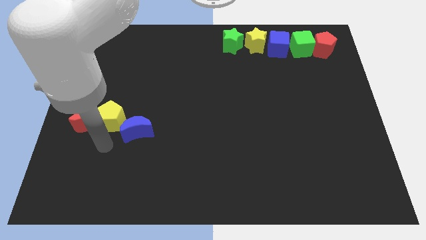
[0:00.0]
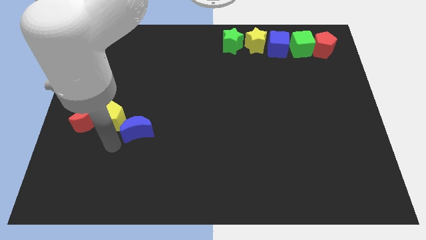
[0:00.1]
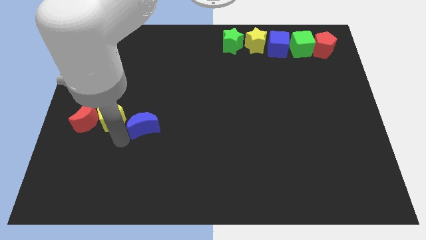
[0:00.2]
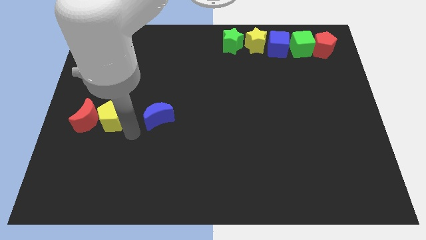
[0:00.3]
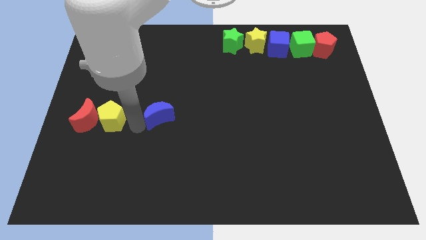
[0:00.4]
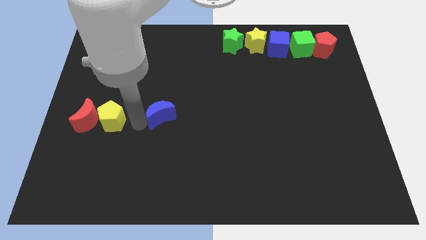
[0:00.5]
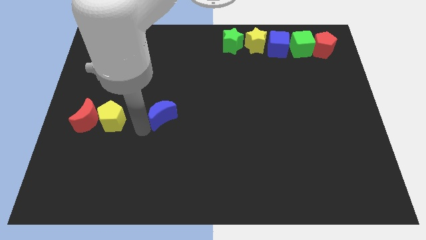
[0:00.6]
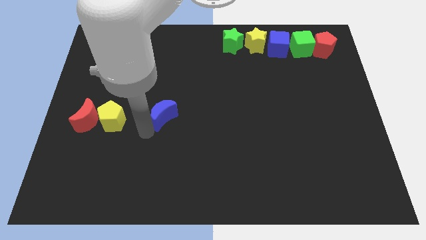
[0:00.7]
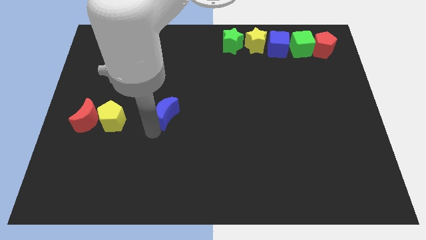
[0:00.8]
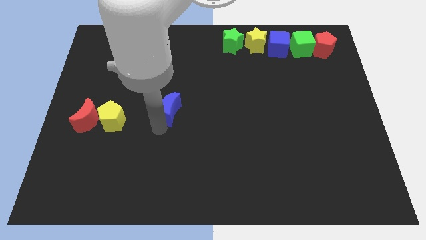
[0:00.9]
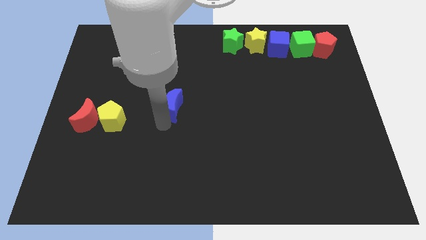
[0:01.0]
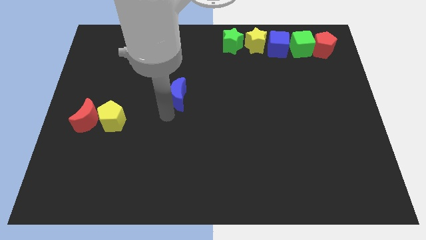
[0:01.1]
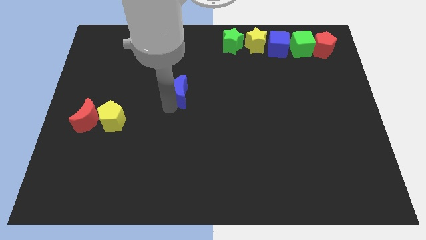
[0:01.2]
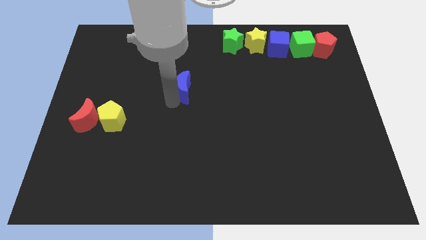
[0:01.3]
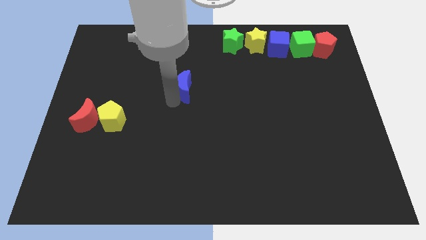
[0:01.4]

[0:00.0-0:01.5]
push the blue crescent diagonally on the top right side of the yellow pentagon

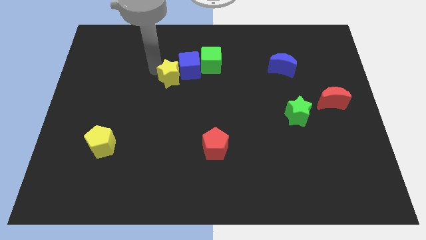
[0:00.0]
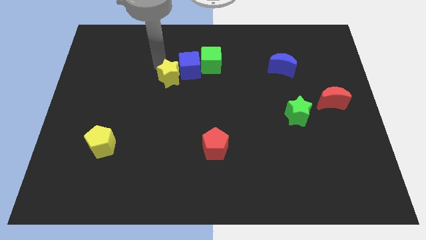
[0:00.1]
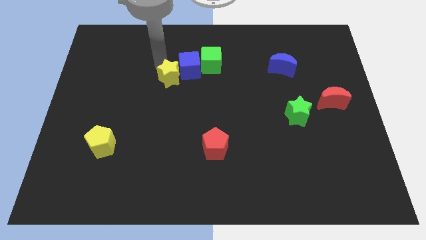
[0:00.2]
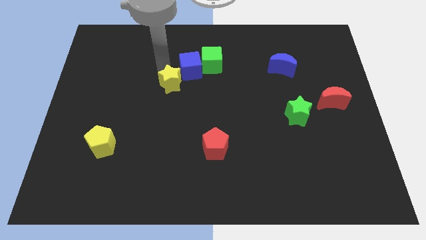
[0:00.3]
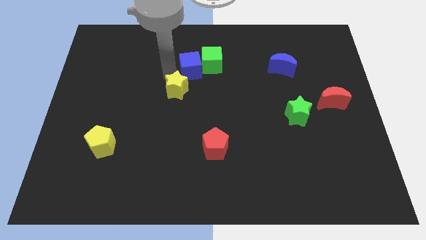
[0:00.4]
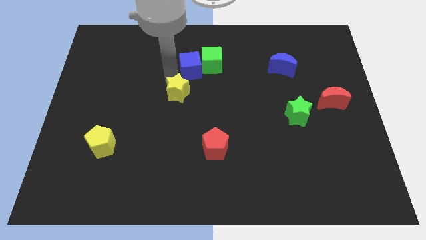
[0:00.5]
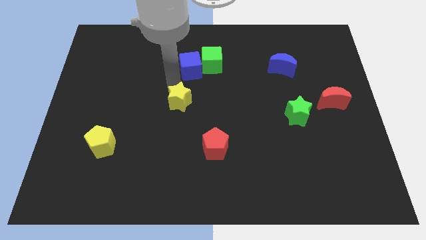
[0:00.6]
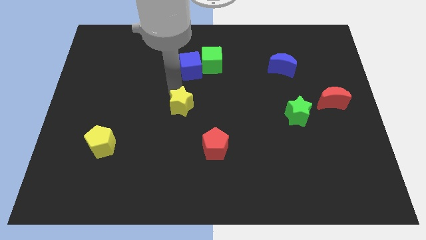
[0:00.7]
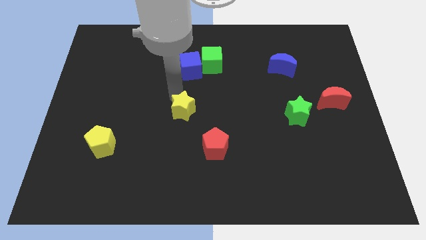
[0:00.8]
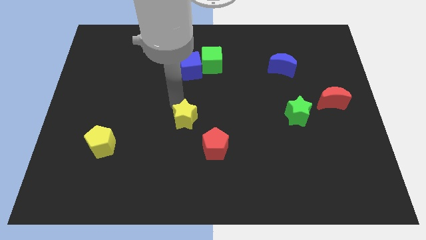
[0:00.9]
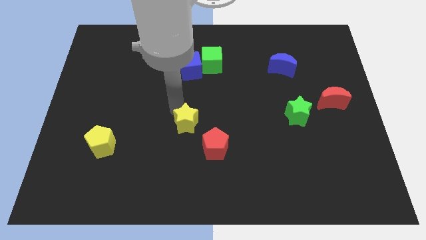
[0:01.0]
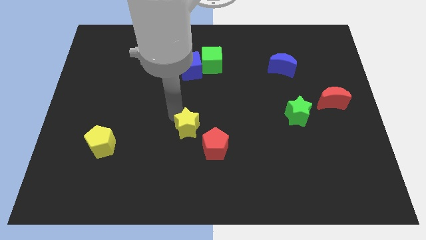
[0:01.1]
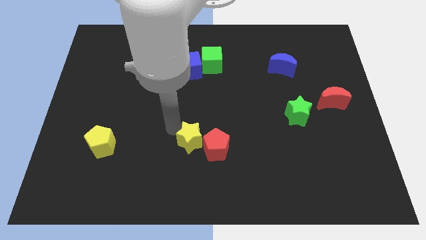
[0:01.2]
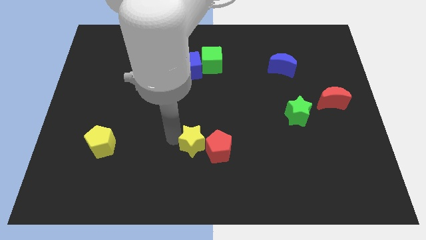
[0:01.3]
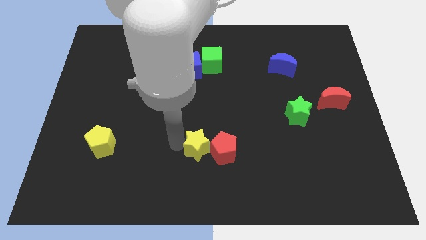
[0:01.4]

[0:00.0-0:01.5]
move the yellow star to the left of the red pentagon

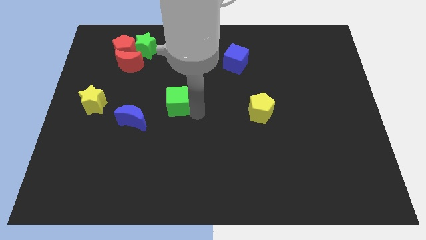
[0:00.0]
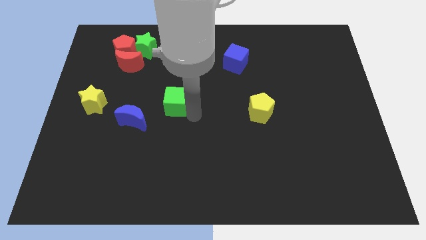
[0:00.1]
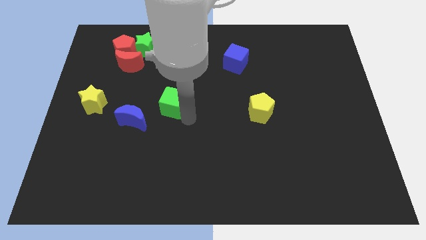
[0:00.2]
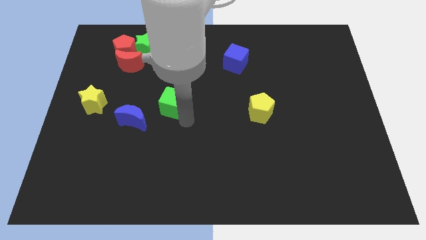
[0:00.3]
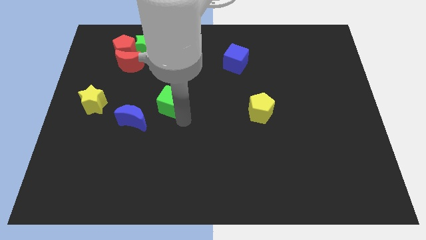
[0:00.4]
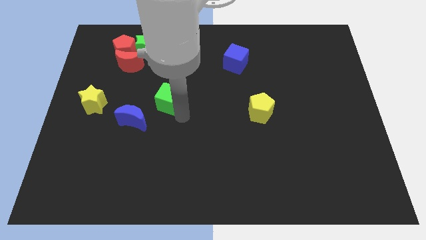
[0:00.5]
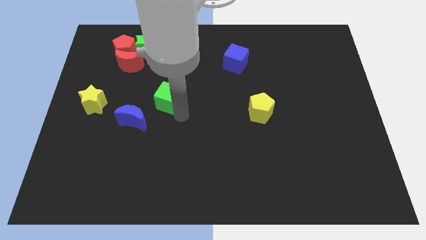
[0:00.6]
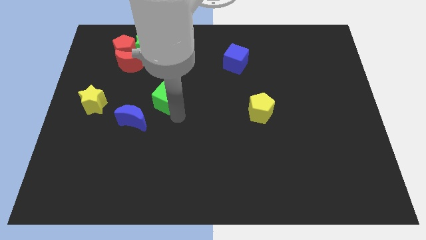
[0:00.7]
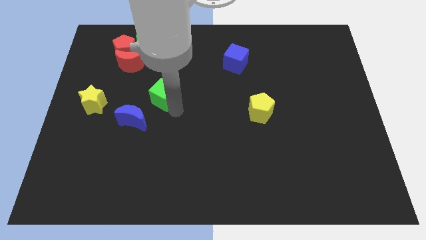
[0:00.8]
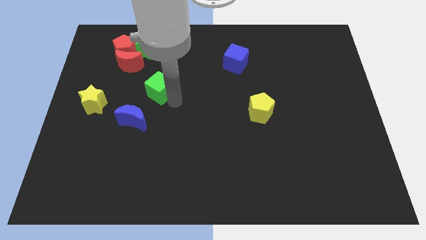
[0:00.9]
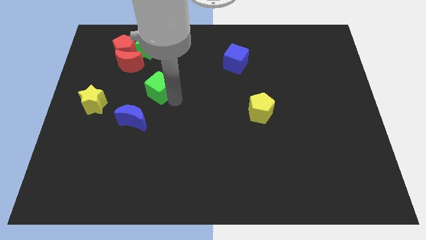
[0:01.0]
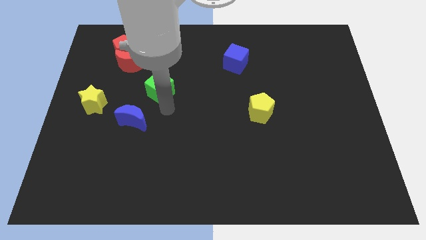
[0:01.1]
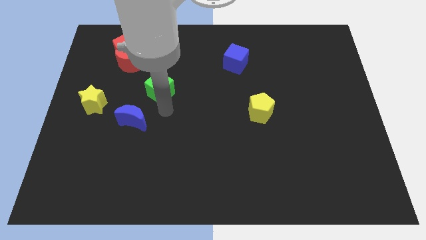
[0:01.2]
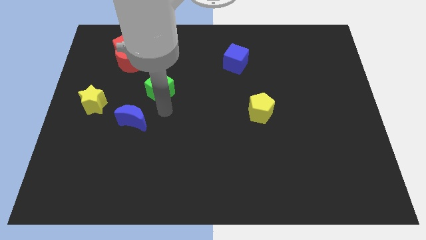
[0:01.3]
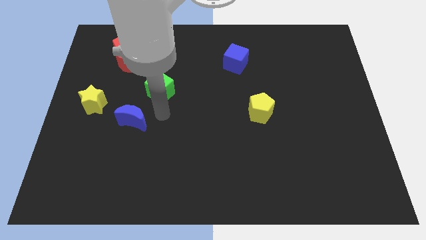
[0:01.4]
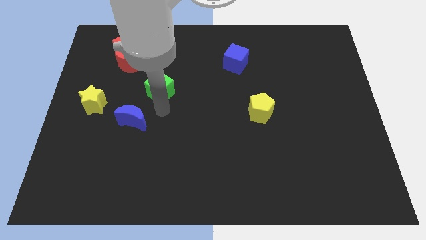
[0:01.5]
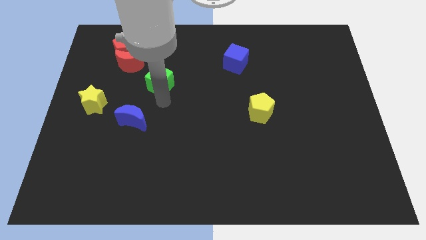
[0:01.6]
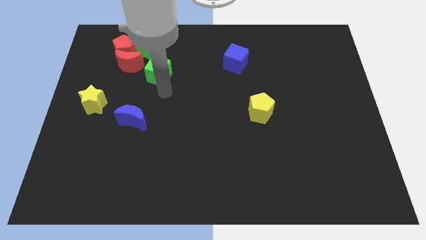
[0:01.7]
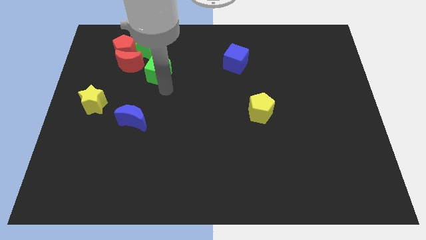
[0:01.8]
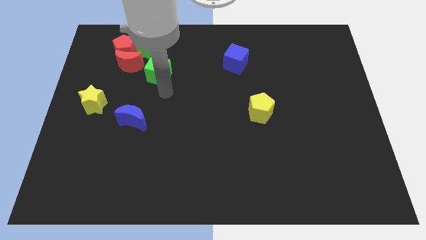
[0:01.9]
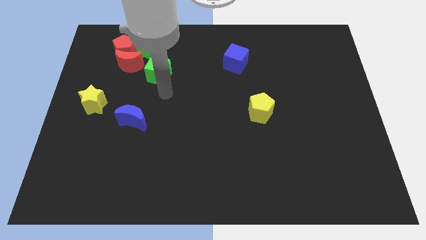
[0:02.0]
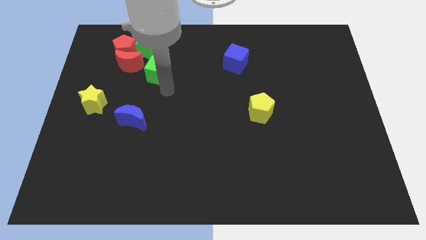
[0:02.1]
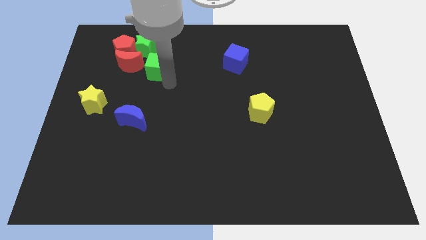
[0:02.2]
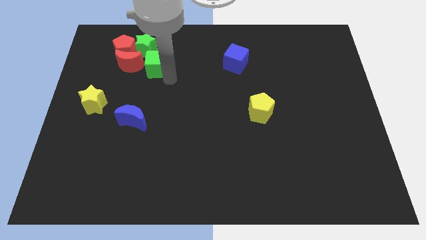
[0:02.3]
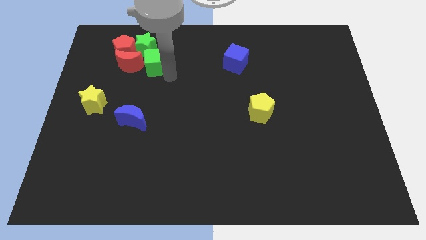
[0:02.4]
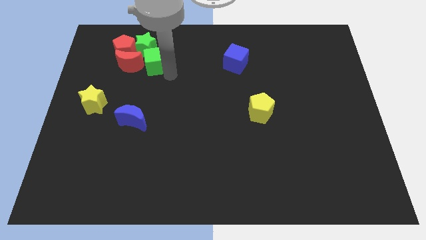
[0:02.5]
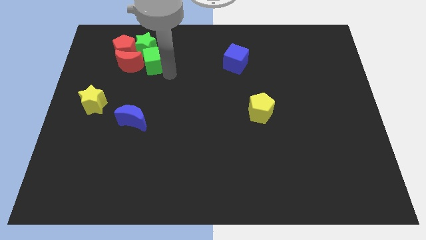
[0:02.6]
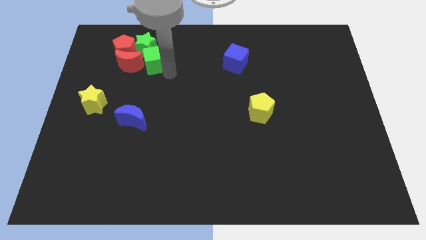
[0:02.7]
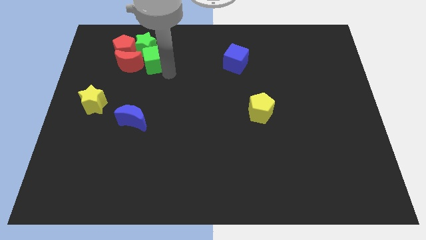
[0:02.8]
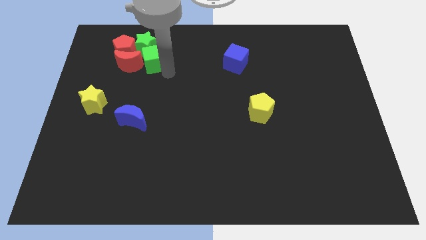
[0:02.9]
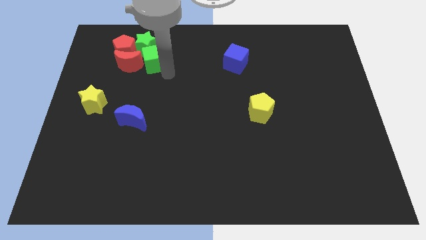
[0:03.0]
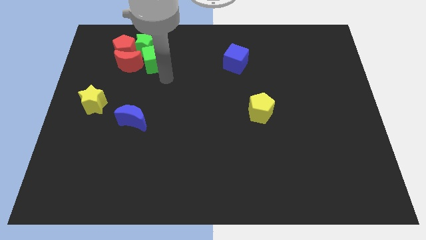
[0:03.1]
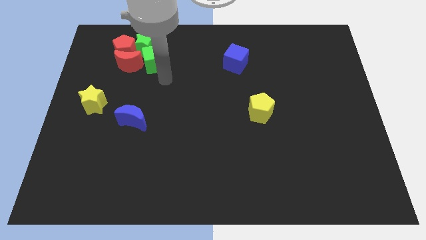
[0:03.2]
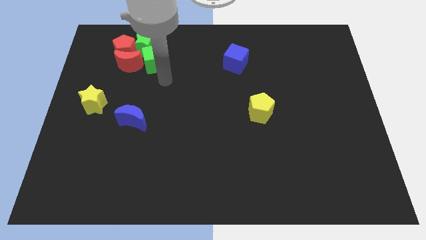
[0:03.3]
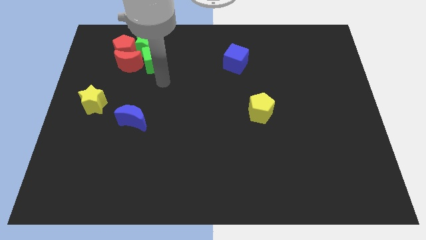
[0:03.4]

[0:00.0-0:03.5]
push the green cube into the green star

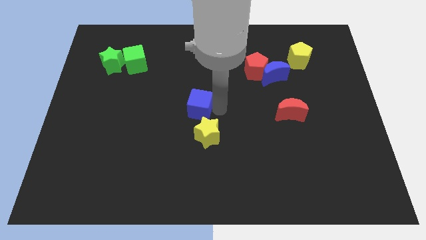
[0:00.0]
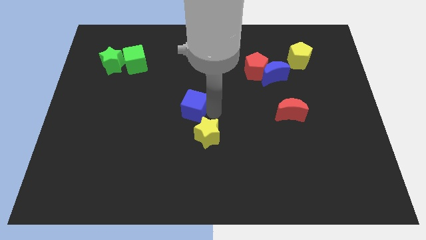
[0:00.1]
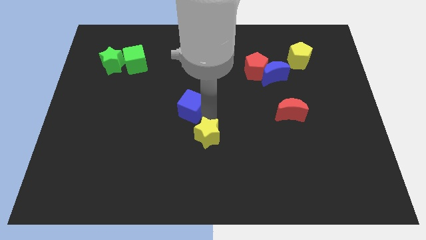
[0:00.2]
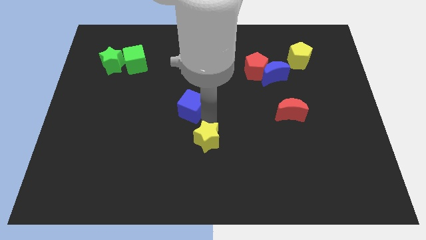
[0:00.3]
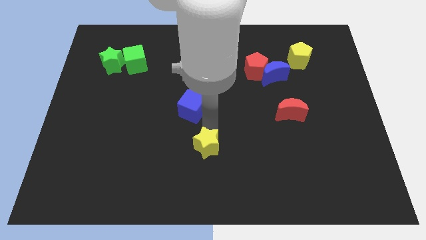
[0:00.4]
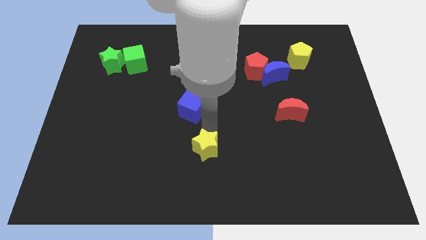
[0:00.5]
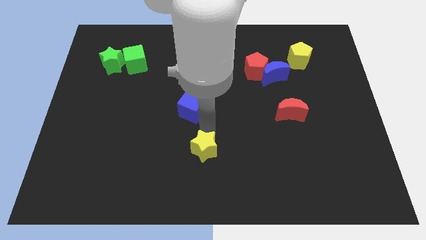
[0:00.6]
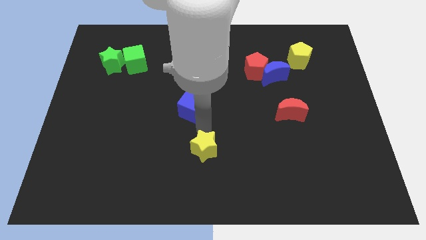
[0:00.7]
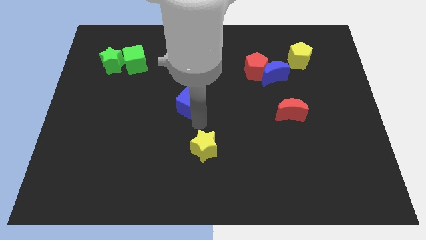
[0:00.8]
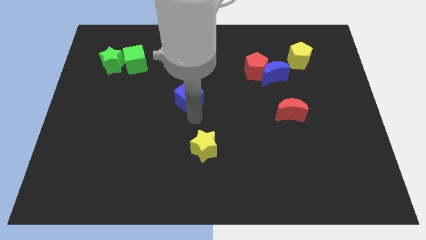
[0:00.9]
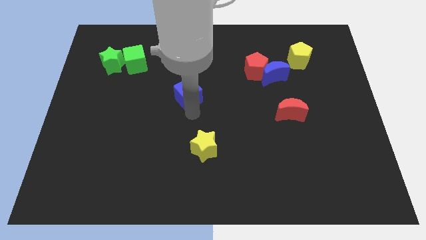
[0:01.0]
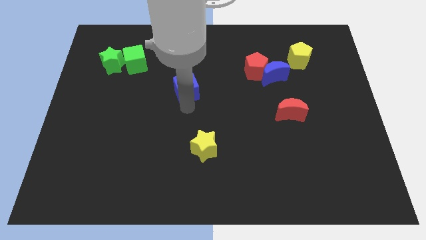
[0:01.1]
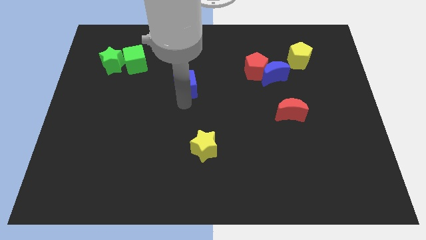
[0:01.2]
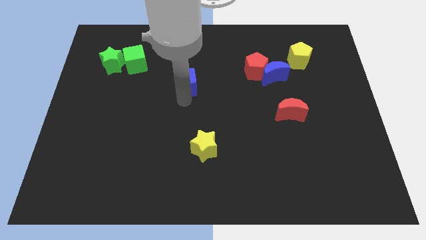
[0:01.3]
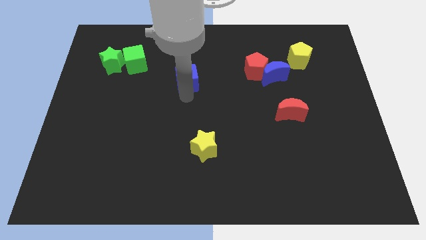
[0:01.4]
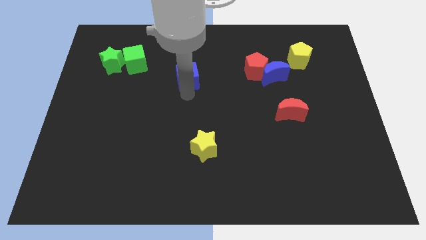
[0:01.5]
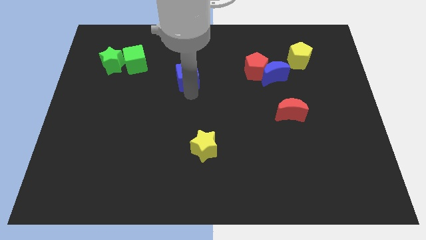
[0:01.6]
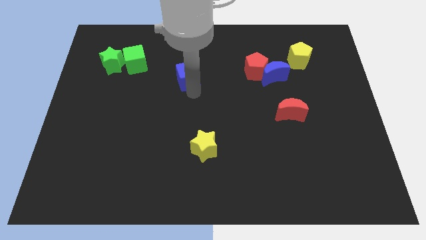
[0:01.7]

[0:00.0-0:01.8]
separate the yellow star and blue cube

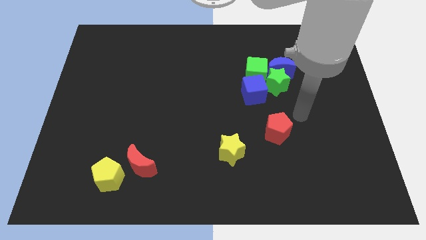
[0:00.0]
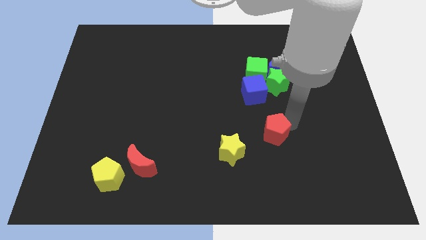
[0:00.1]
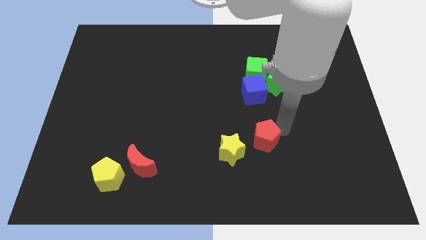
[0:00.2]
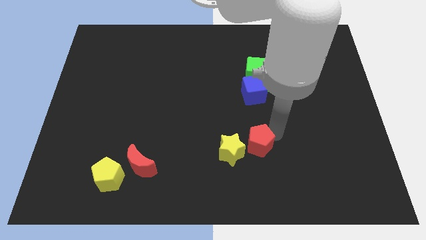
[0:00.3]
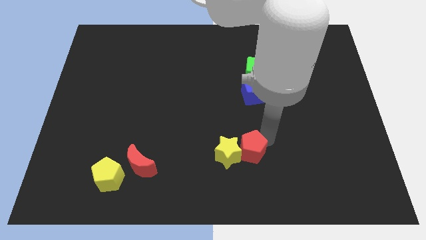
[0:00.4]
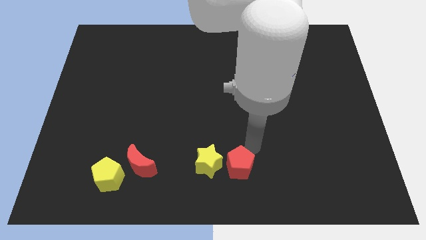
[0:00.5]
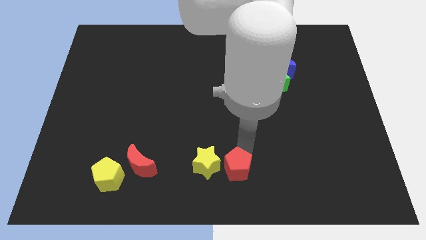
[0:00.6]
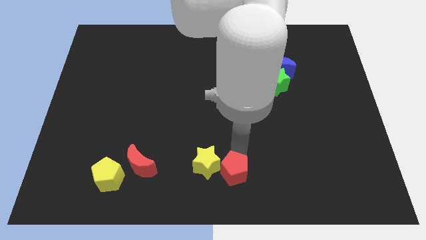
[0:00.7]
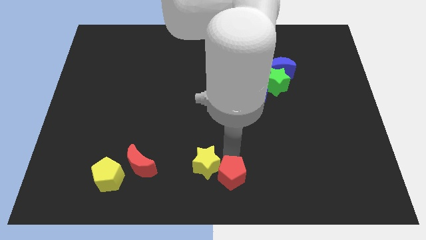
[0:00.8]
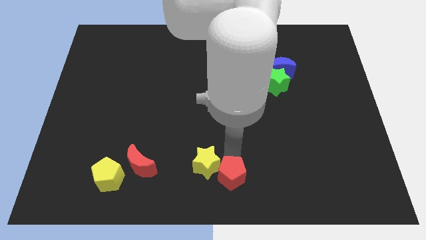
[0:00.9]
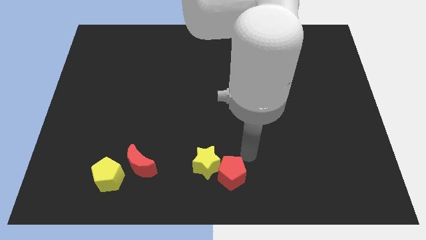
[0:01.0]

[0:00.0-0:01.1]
push red pentagon into yellow star
